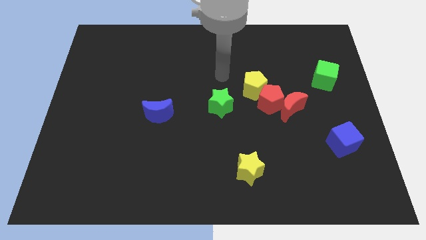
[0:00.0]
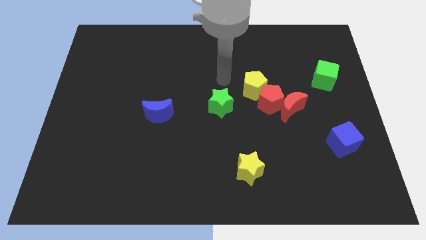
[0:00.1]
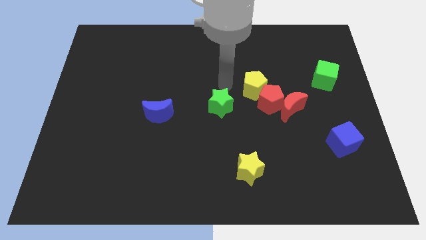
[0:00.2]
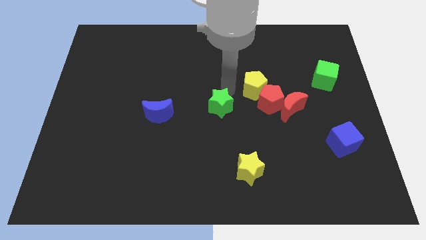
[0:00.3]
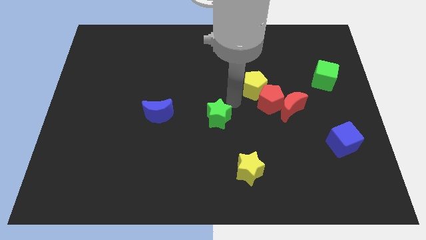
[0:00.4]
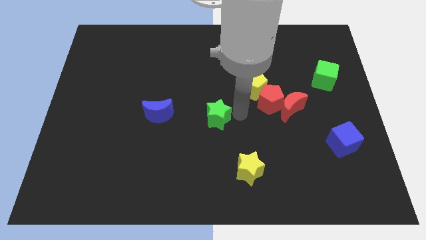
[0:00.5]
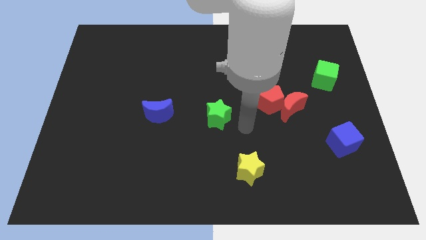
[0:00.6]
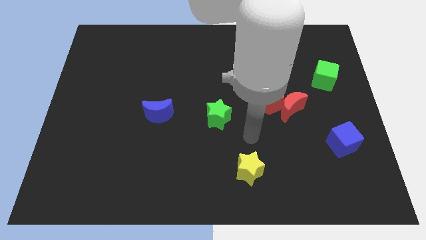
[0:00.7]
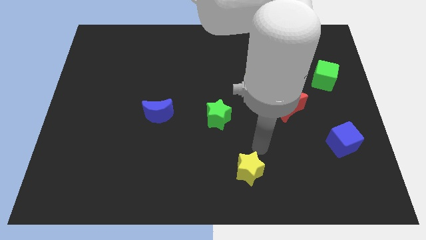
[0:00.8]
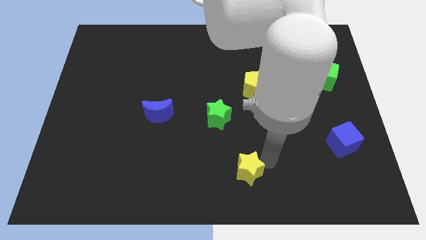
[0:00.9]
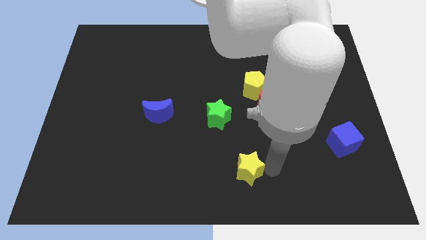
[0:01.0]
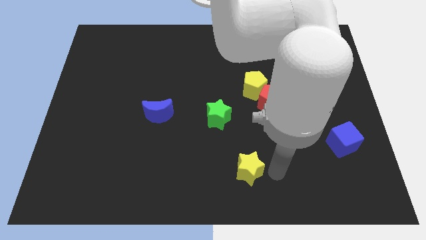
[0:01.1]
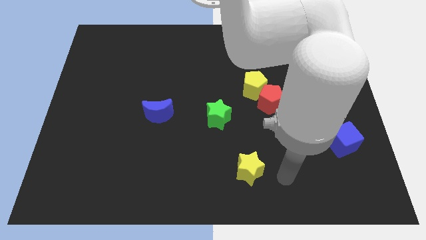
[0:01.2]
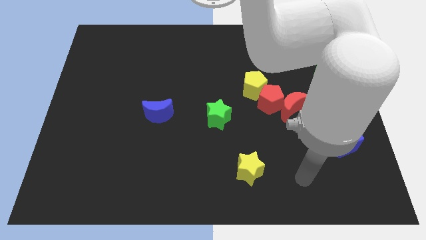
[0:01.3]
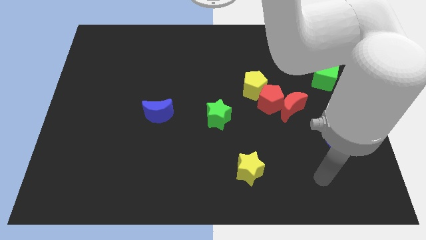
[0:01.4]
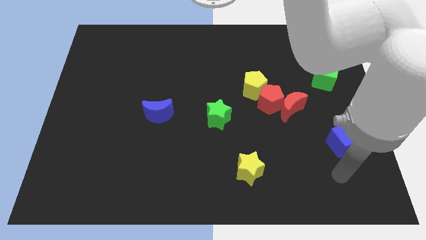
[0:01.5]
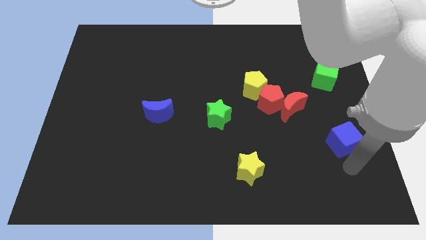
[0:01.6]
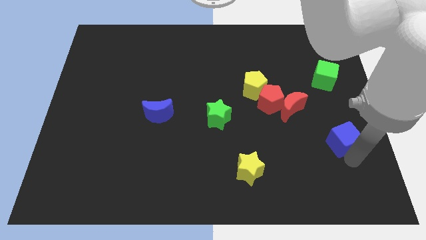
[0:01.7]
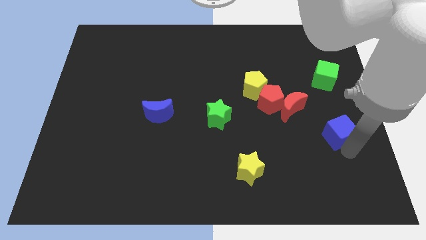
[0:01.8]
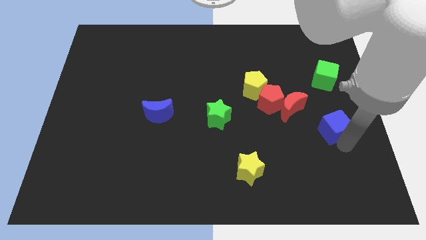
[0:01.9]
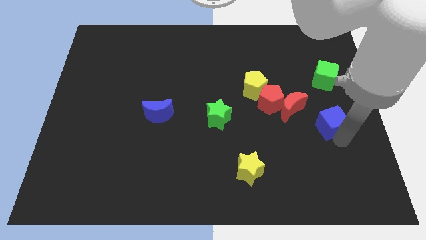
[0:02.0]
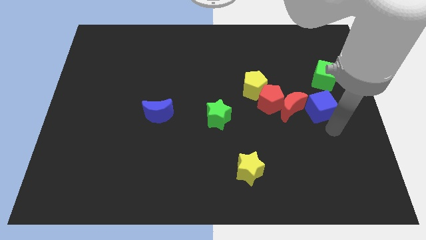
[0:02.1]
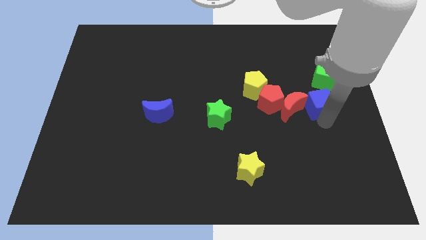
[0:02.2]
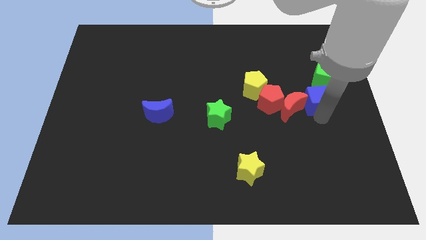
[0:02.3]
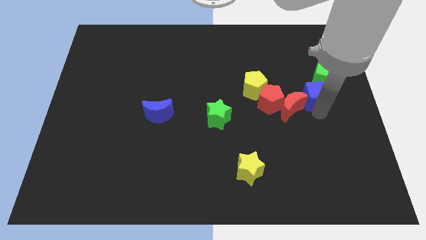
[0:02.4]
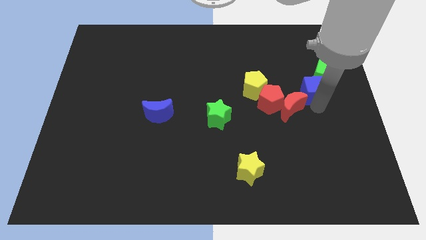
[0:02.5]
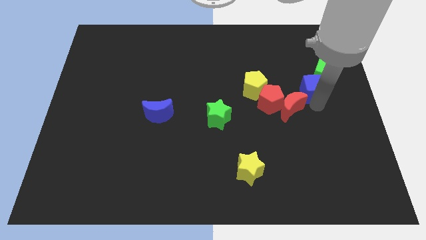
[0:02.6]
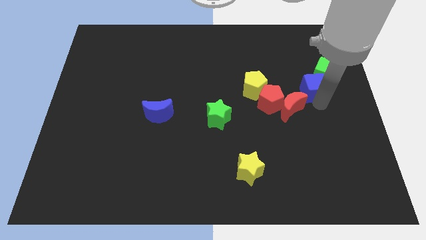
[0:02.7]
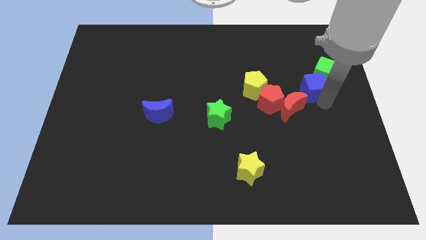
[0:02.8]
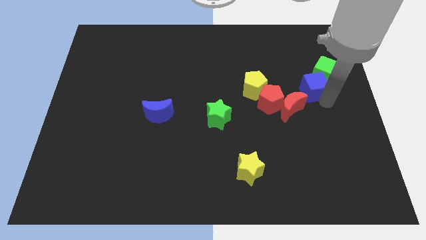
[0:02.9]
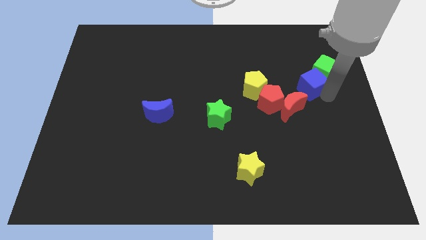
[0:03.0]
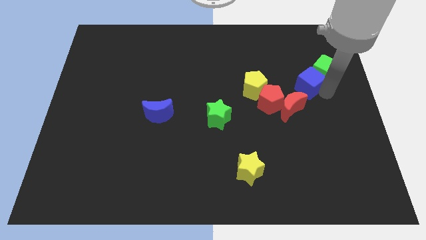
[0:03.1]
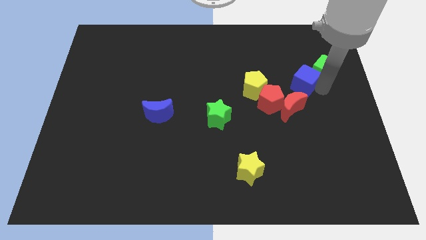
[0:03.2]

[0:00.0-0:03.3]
place the blue cube in between the green cube and red moon

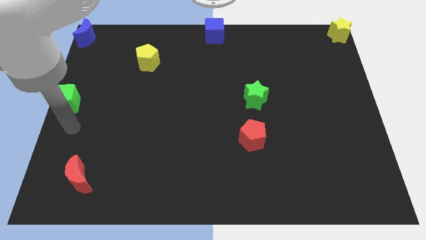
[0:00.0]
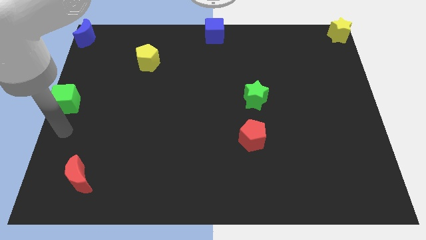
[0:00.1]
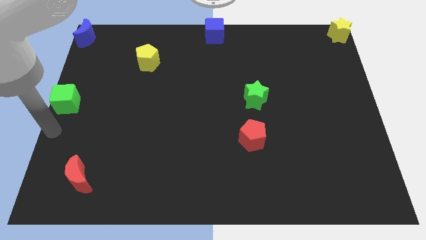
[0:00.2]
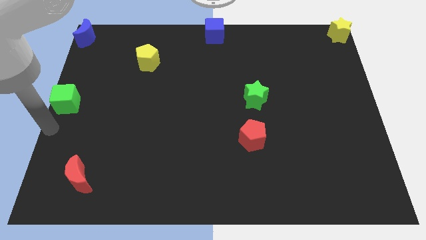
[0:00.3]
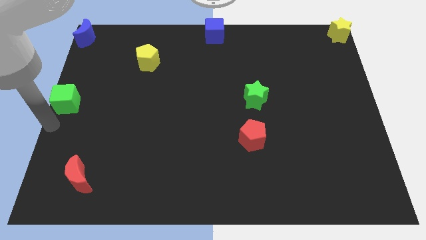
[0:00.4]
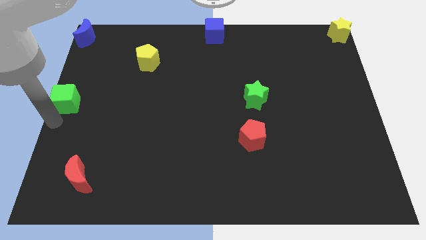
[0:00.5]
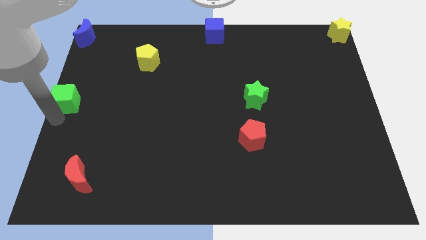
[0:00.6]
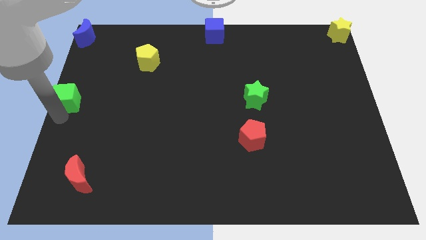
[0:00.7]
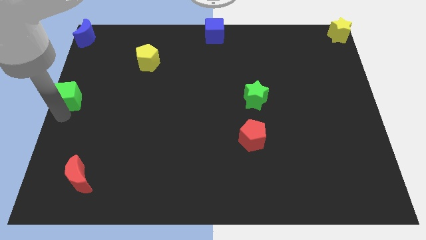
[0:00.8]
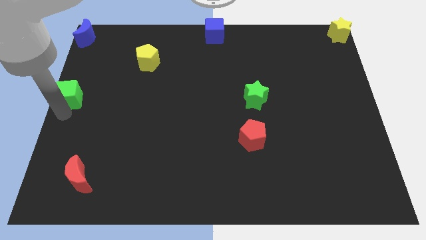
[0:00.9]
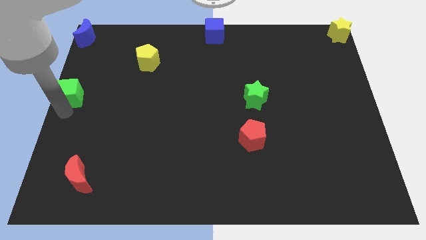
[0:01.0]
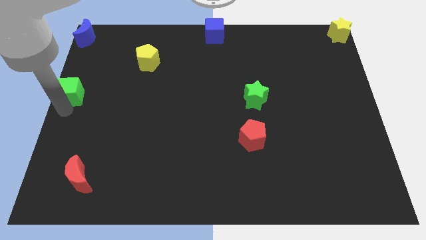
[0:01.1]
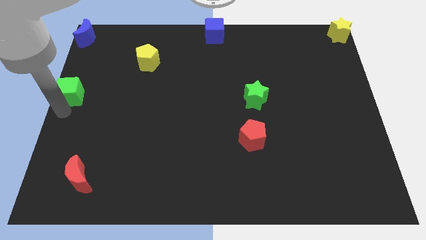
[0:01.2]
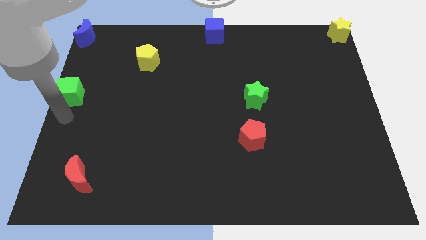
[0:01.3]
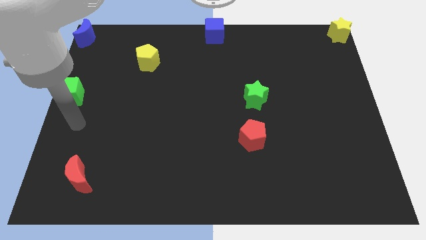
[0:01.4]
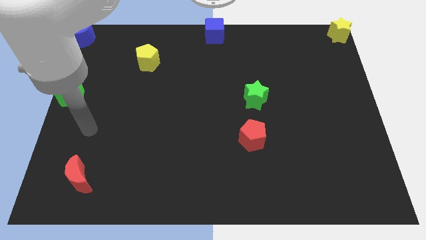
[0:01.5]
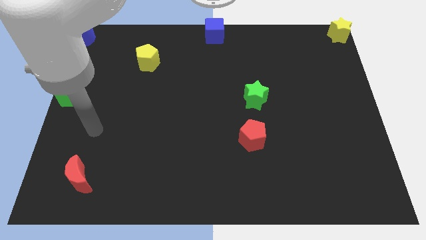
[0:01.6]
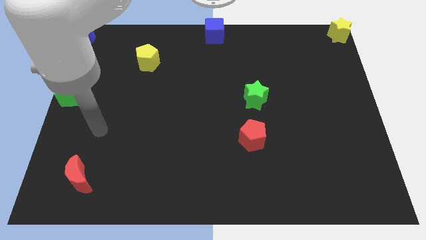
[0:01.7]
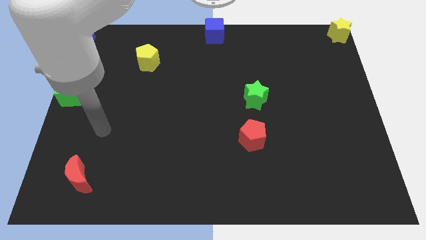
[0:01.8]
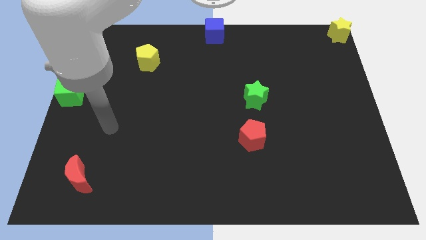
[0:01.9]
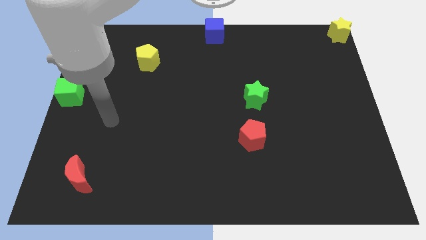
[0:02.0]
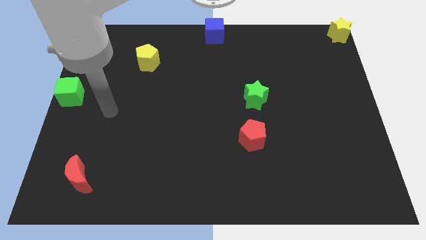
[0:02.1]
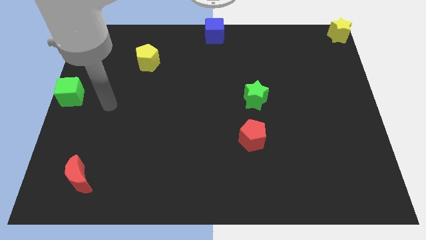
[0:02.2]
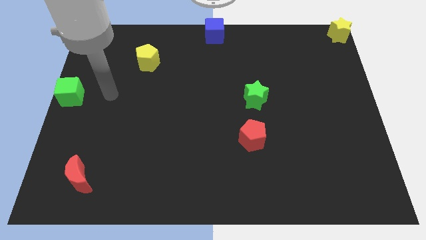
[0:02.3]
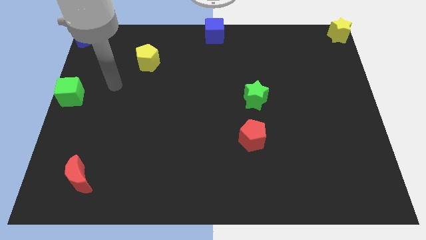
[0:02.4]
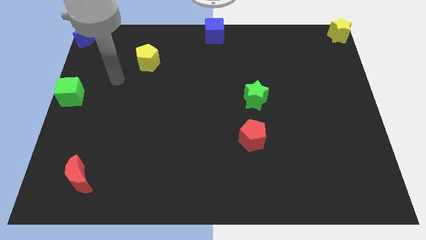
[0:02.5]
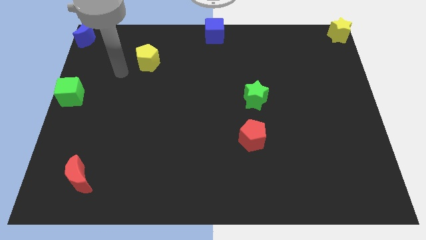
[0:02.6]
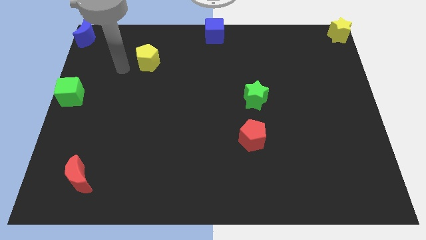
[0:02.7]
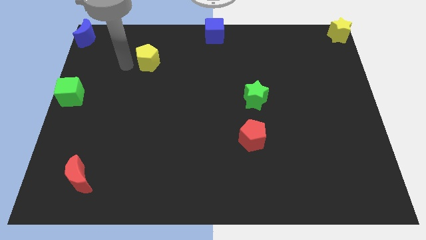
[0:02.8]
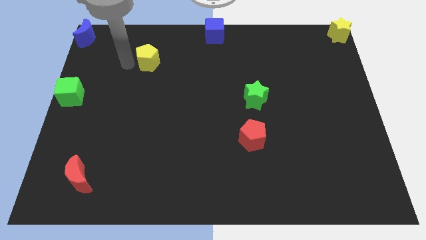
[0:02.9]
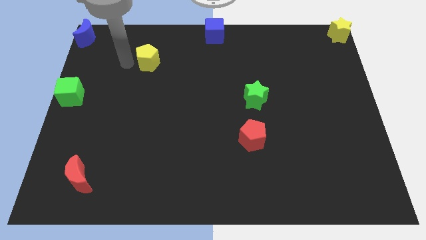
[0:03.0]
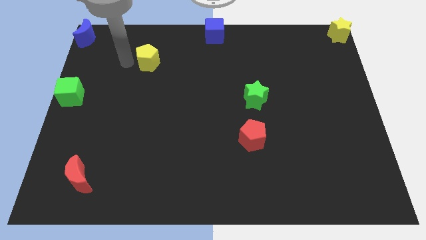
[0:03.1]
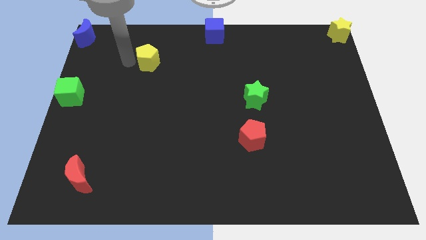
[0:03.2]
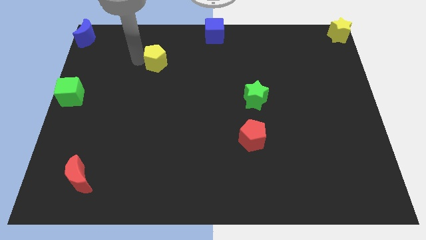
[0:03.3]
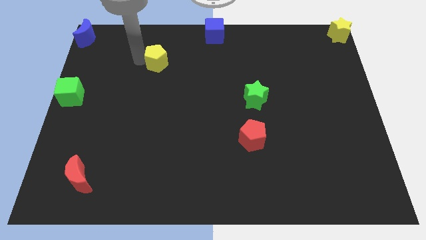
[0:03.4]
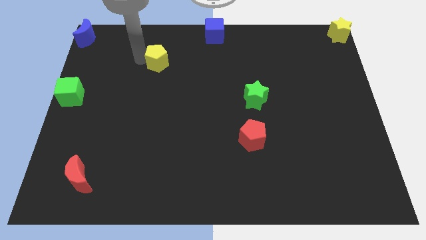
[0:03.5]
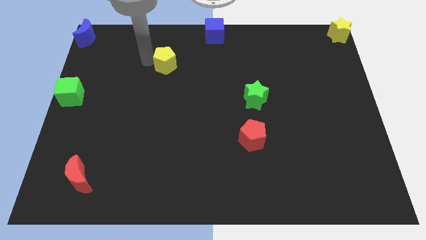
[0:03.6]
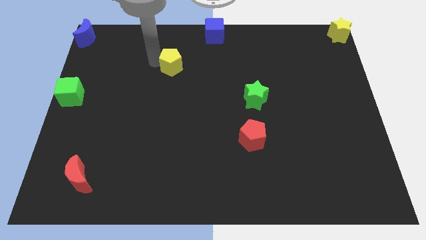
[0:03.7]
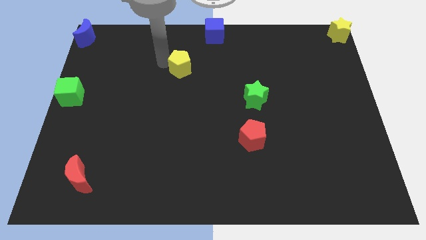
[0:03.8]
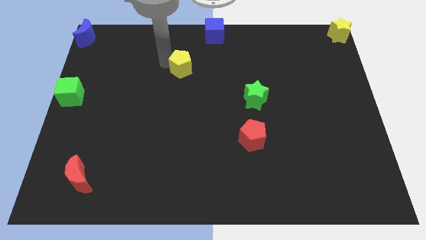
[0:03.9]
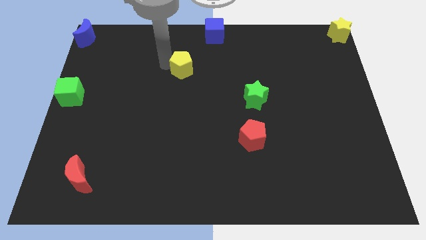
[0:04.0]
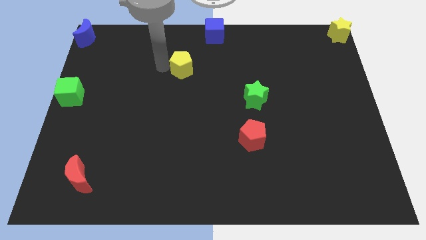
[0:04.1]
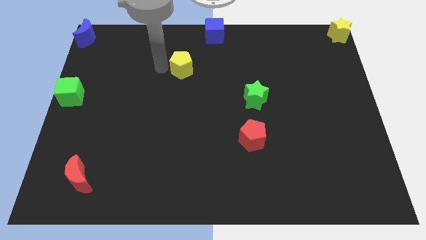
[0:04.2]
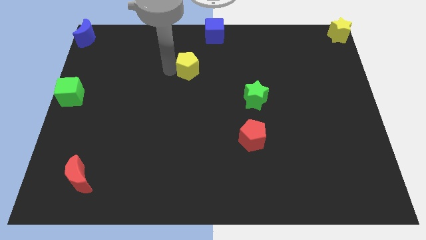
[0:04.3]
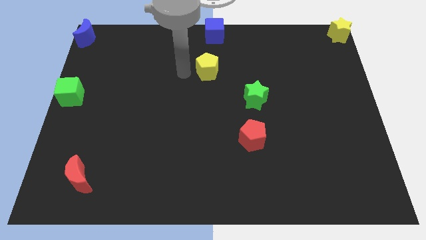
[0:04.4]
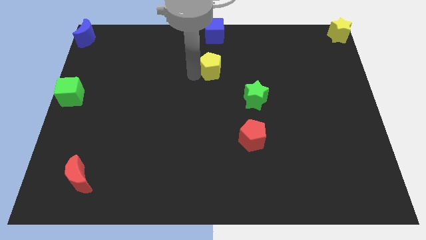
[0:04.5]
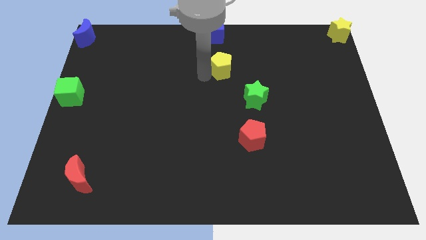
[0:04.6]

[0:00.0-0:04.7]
move the yellow pentagon below blue cube

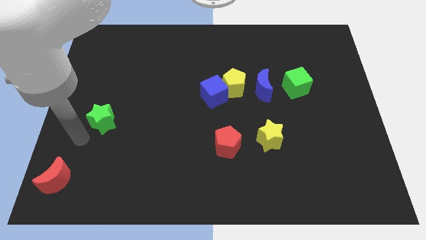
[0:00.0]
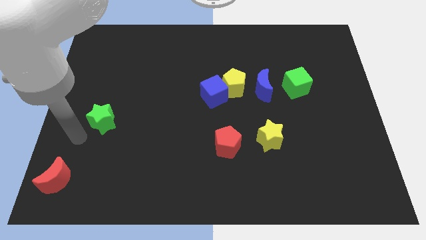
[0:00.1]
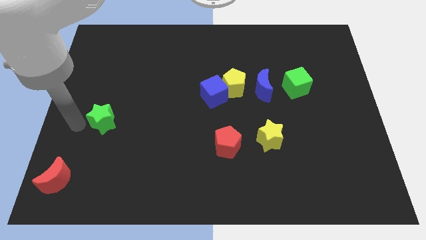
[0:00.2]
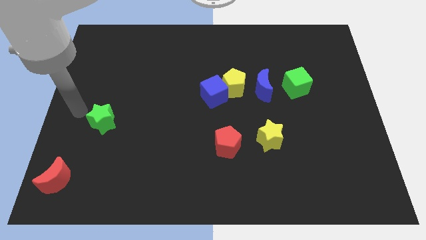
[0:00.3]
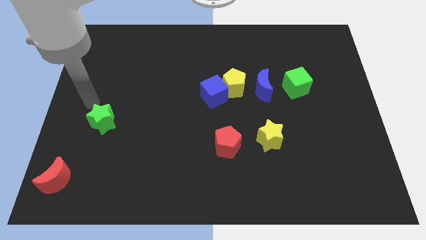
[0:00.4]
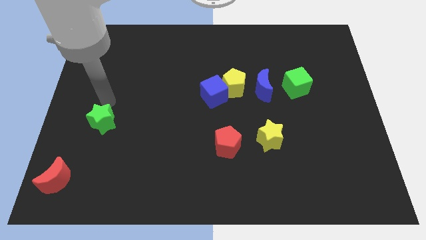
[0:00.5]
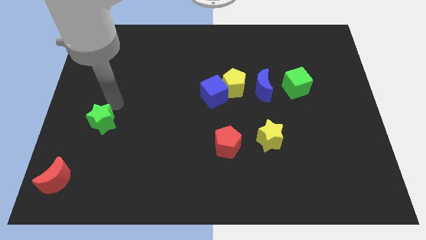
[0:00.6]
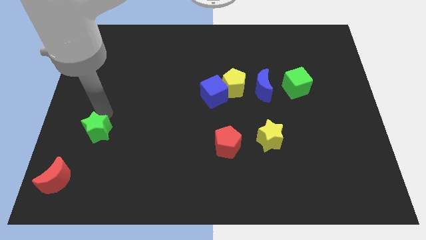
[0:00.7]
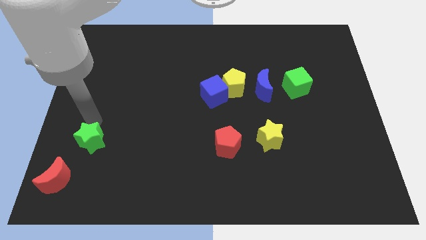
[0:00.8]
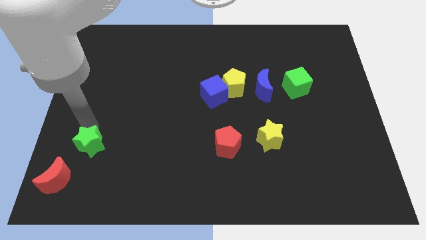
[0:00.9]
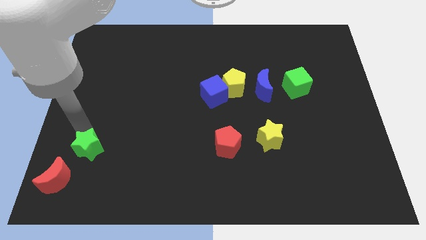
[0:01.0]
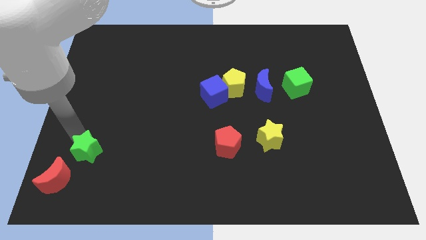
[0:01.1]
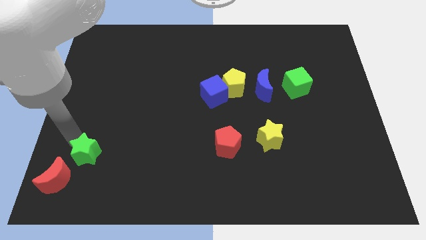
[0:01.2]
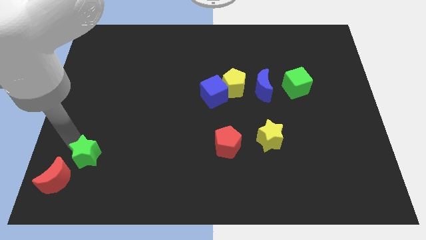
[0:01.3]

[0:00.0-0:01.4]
move green star to the top right of red crescent
